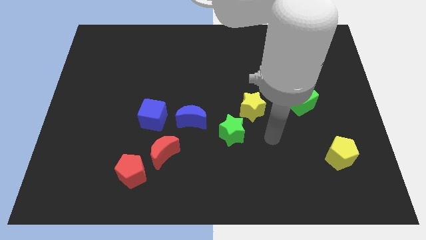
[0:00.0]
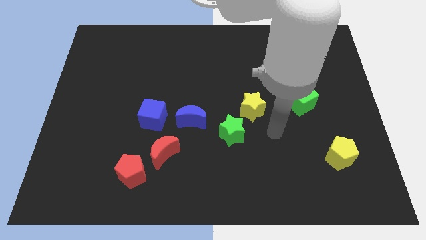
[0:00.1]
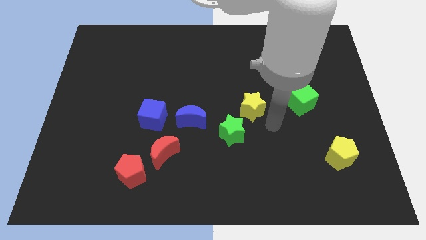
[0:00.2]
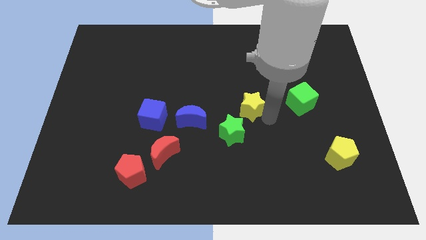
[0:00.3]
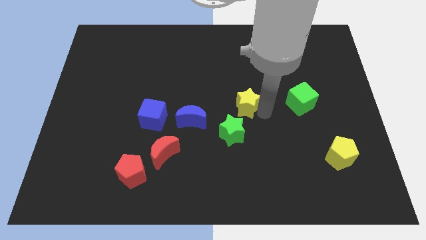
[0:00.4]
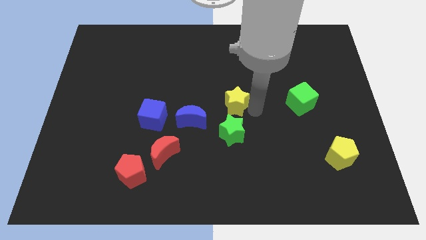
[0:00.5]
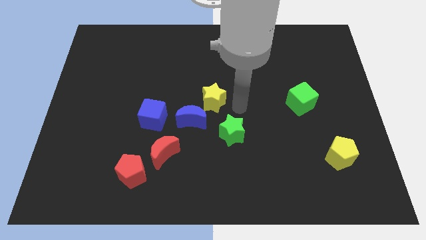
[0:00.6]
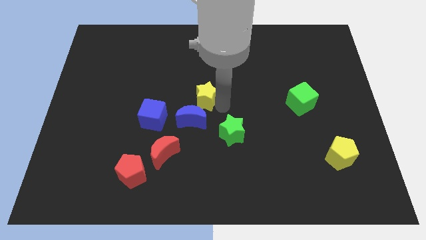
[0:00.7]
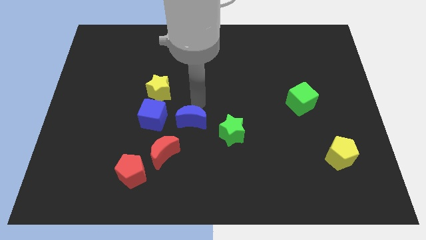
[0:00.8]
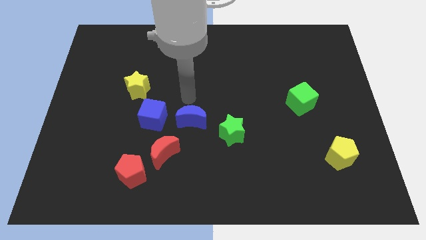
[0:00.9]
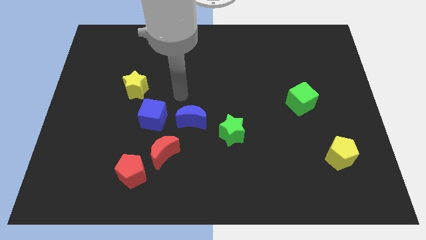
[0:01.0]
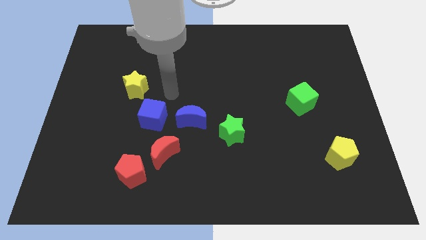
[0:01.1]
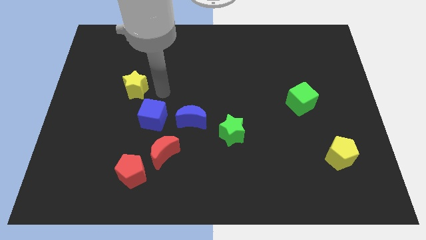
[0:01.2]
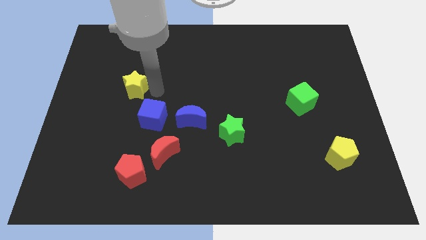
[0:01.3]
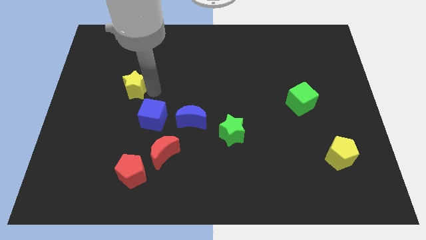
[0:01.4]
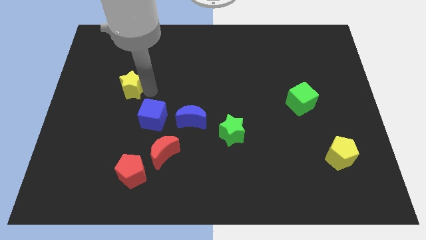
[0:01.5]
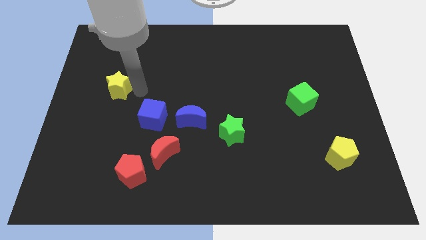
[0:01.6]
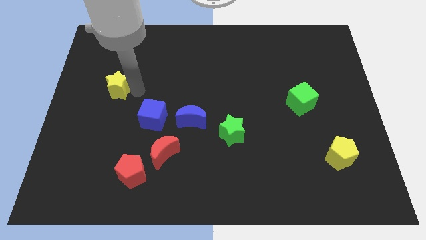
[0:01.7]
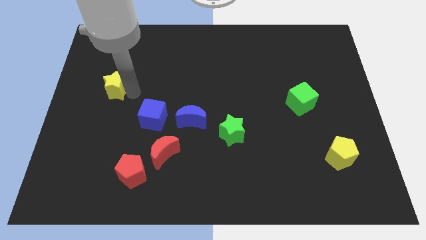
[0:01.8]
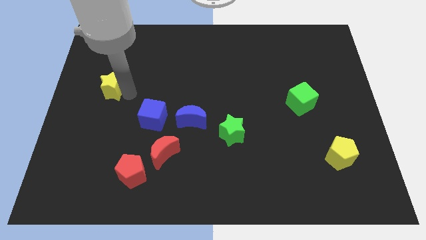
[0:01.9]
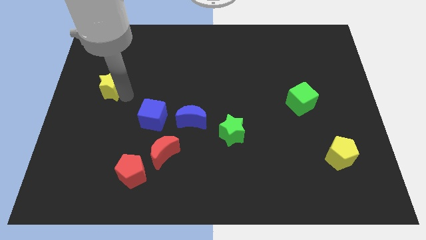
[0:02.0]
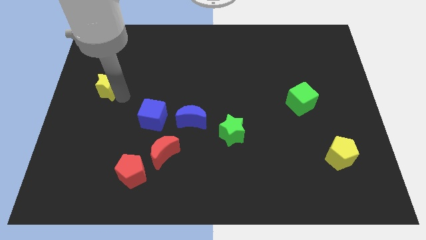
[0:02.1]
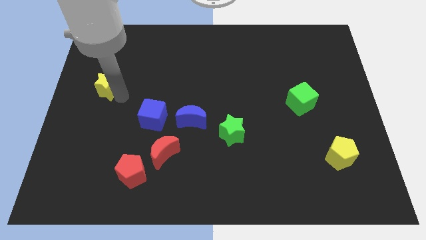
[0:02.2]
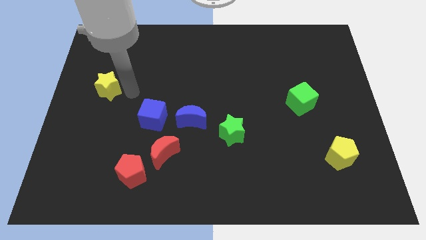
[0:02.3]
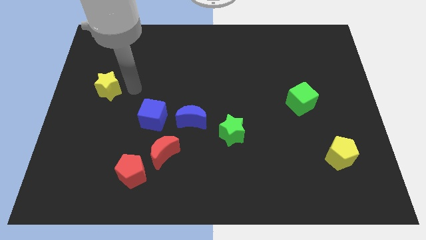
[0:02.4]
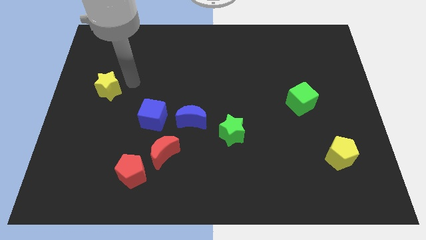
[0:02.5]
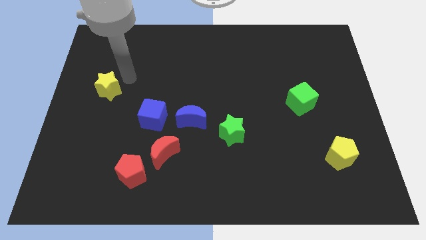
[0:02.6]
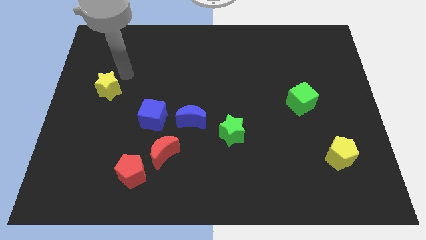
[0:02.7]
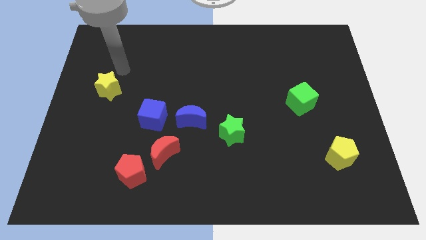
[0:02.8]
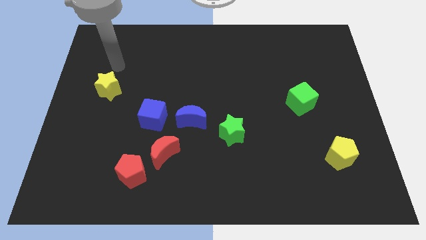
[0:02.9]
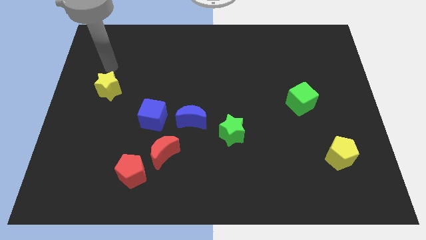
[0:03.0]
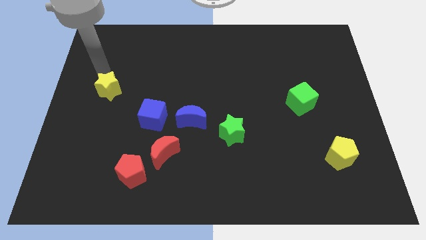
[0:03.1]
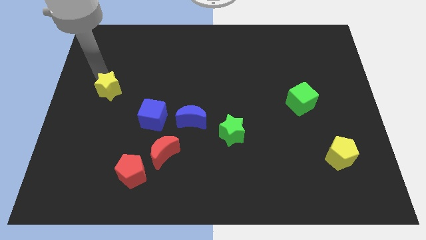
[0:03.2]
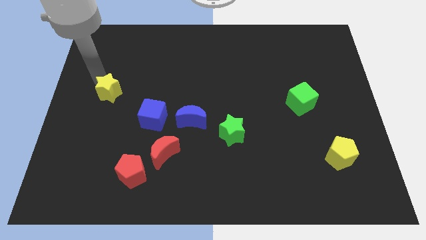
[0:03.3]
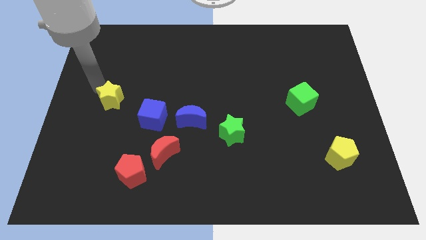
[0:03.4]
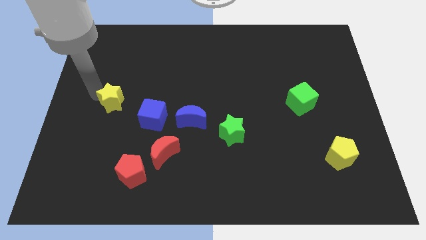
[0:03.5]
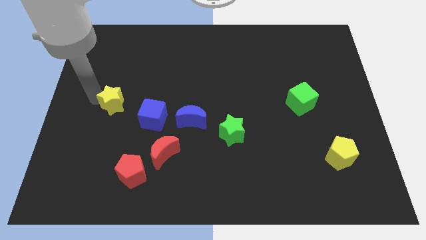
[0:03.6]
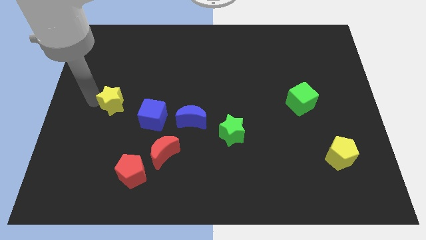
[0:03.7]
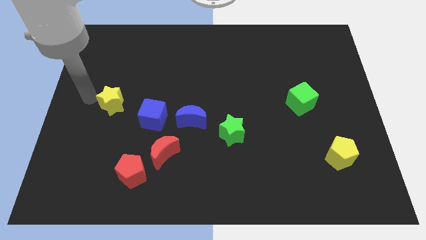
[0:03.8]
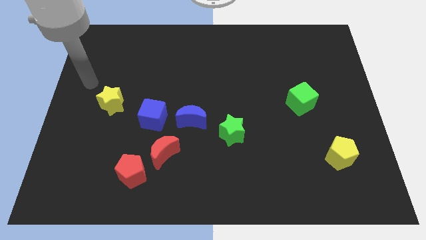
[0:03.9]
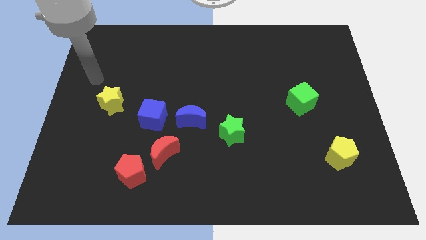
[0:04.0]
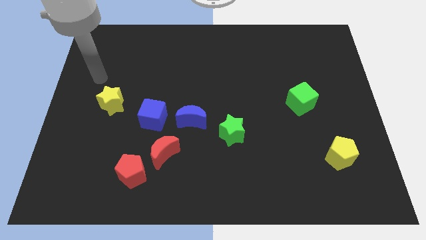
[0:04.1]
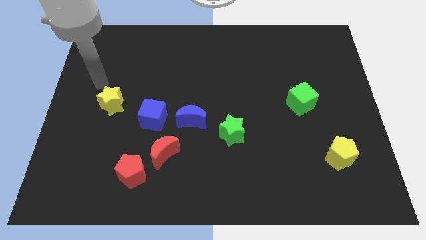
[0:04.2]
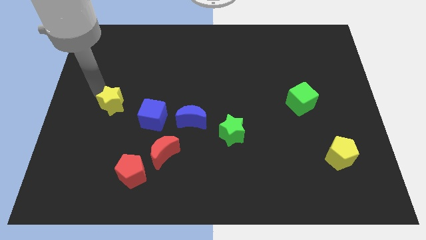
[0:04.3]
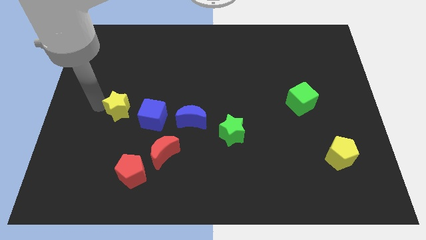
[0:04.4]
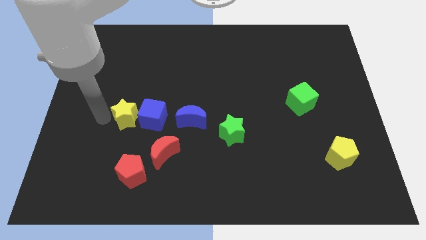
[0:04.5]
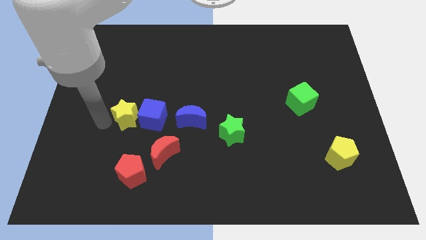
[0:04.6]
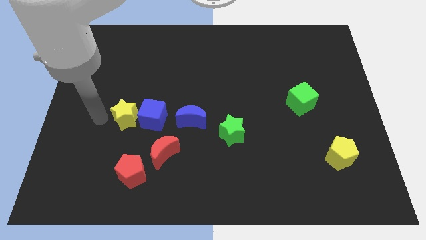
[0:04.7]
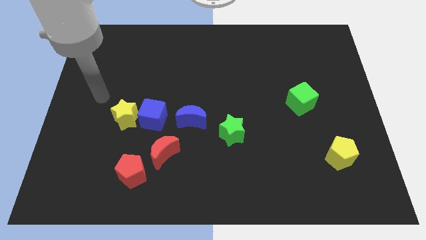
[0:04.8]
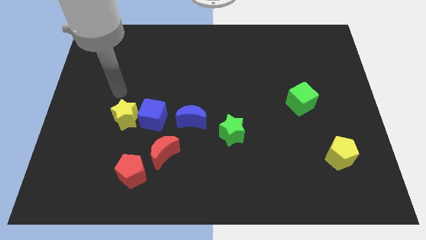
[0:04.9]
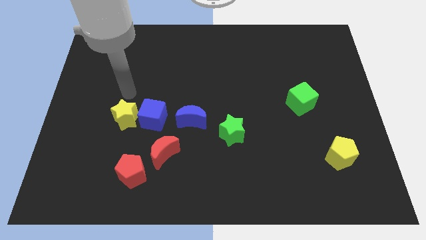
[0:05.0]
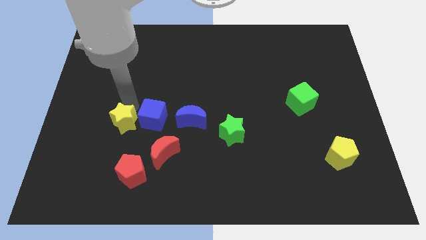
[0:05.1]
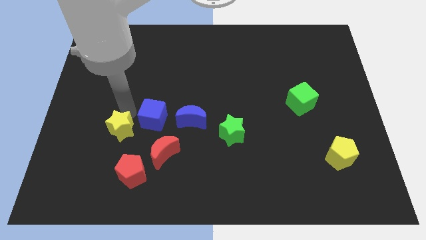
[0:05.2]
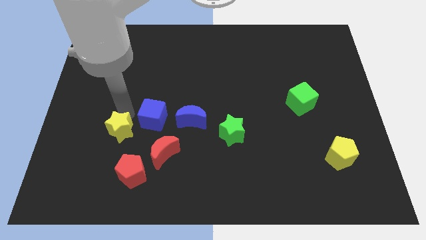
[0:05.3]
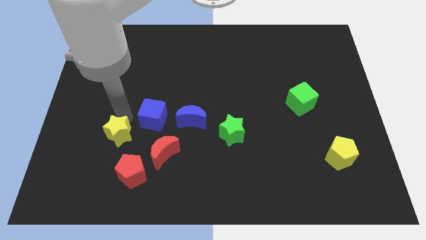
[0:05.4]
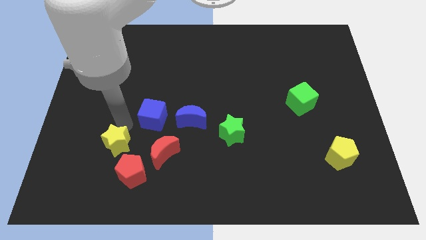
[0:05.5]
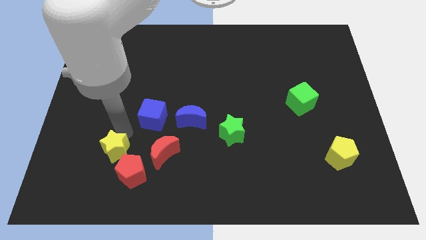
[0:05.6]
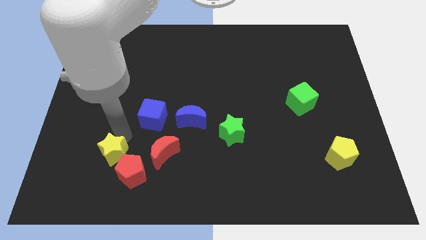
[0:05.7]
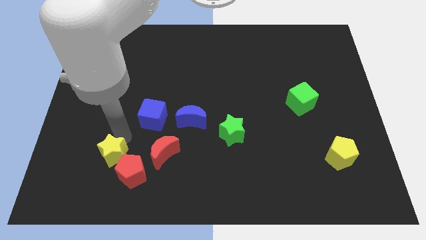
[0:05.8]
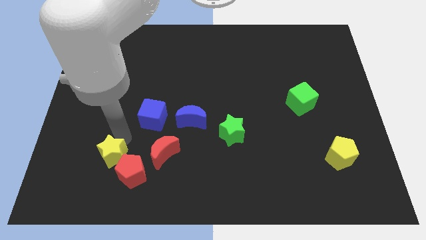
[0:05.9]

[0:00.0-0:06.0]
slide the yellow star towards the red pentagon

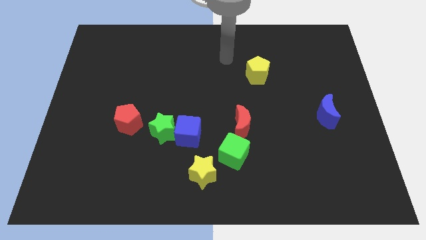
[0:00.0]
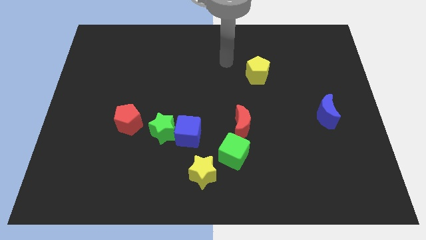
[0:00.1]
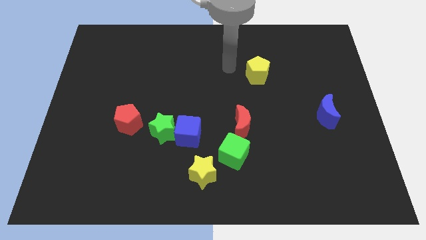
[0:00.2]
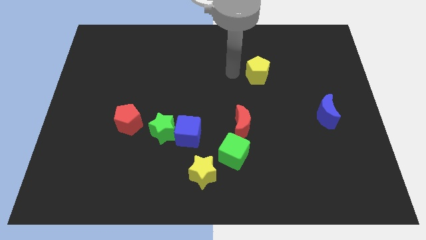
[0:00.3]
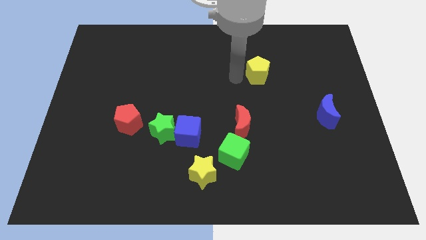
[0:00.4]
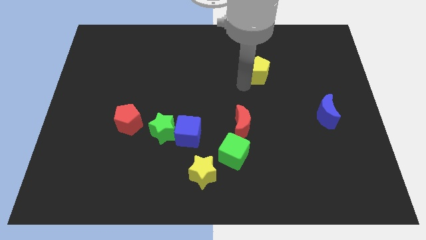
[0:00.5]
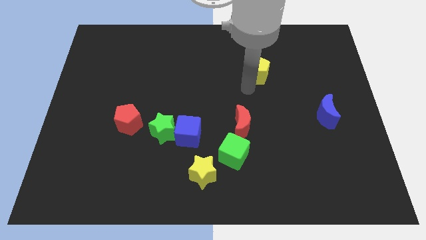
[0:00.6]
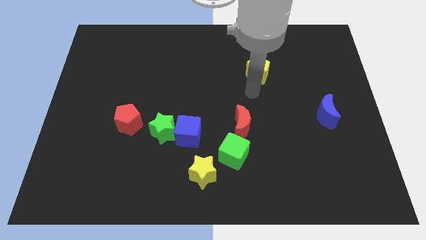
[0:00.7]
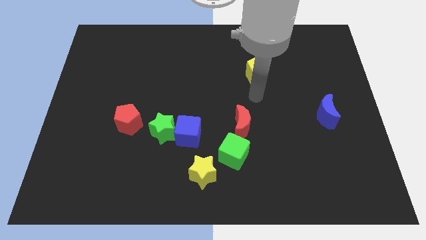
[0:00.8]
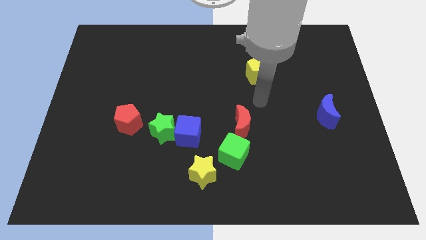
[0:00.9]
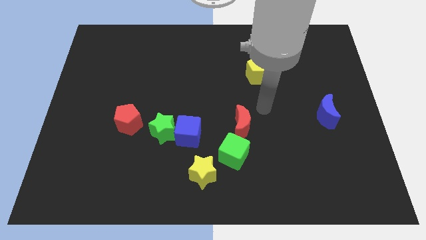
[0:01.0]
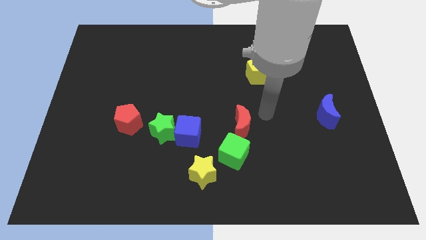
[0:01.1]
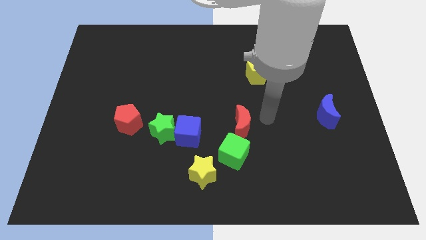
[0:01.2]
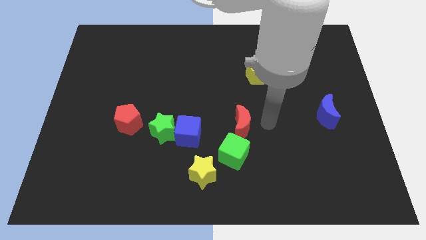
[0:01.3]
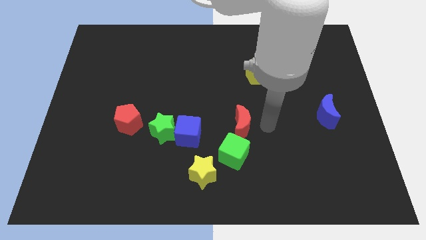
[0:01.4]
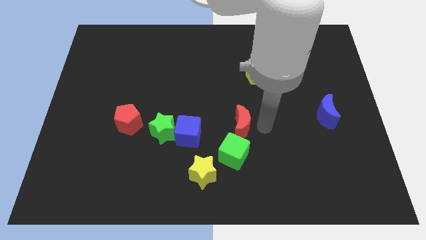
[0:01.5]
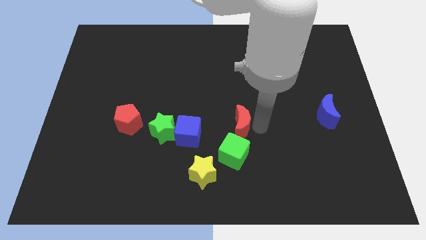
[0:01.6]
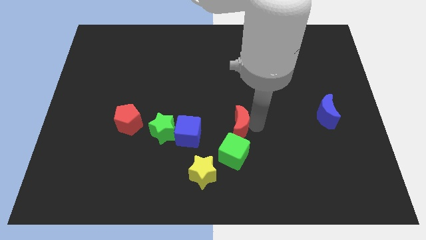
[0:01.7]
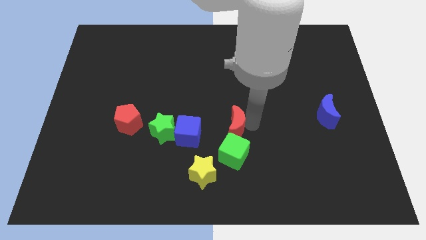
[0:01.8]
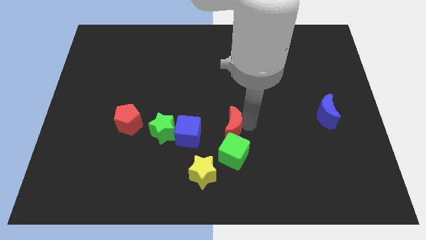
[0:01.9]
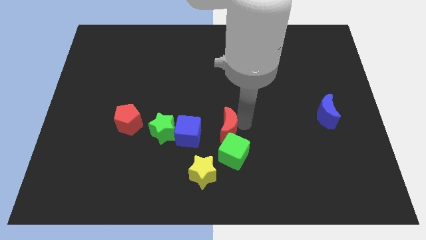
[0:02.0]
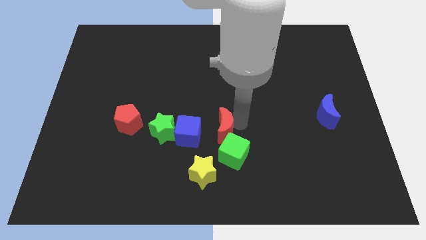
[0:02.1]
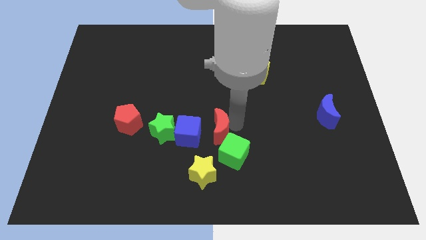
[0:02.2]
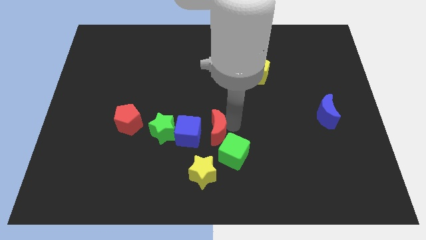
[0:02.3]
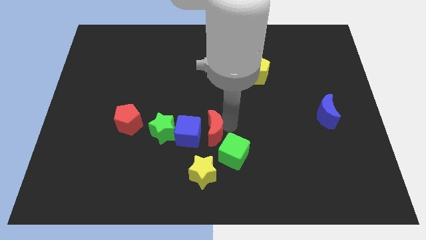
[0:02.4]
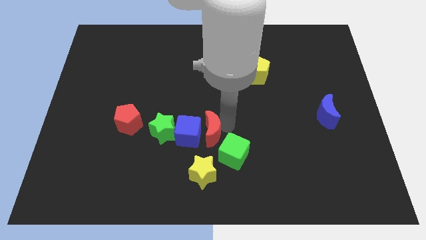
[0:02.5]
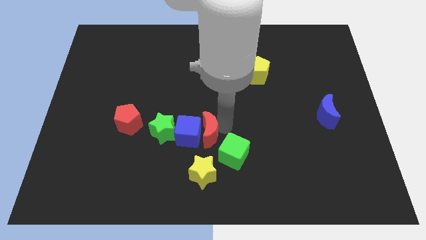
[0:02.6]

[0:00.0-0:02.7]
move the red moon next to the blue cube

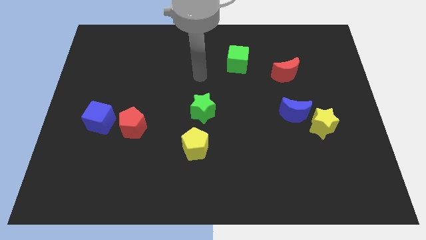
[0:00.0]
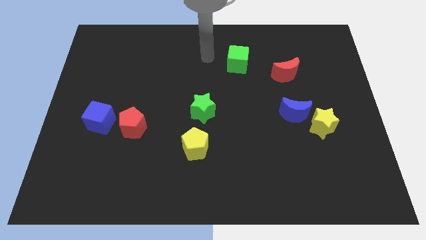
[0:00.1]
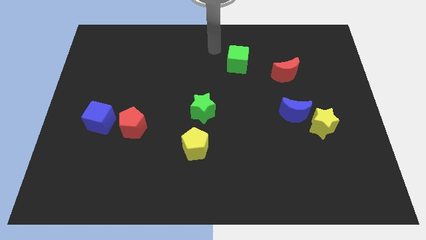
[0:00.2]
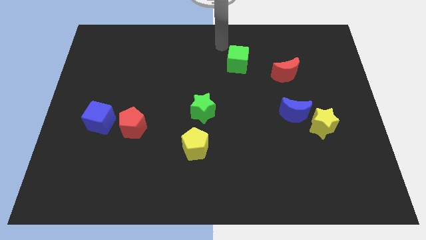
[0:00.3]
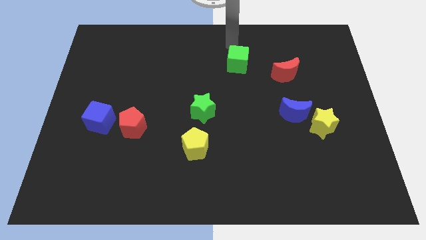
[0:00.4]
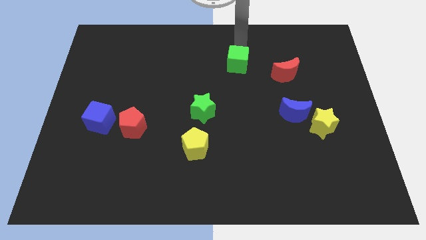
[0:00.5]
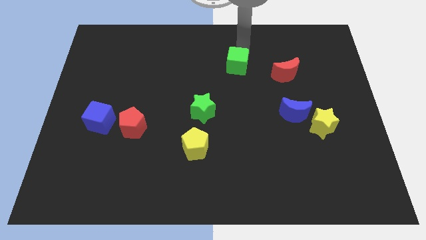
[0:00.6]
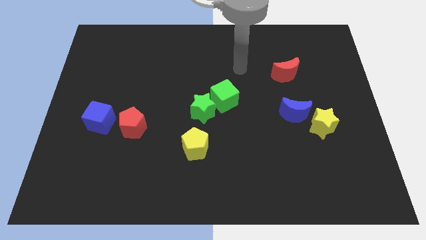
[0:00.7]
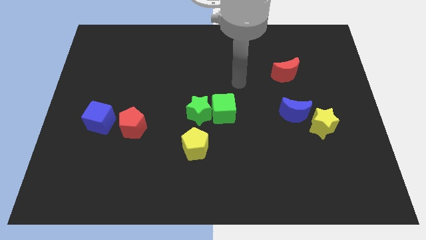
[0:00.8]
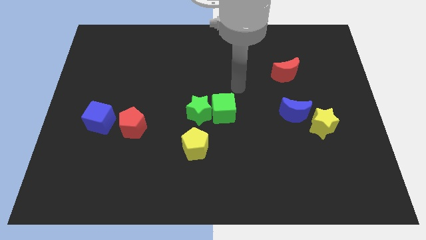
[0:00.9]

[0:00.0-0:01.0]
slide the green cube to the green star
